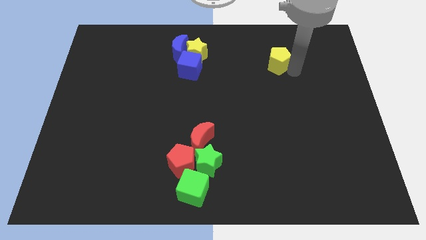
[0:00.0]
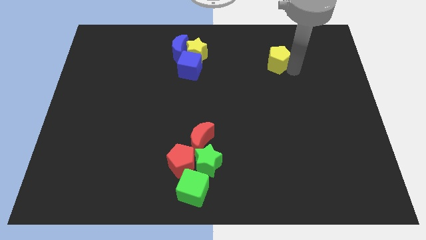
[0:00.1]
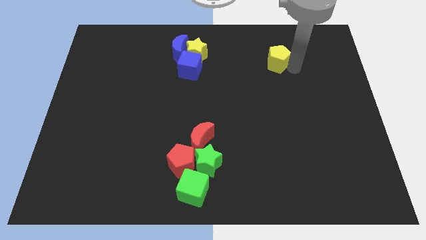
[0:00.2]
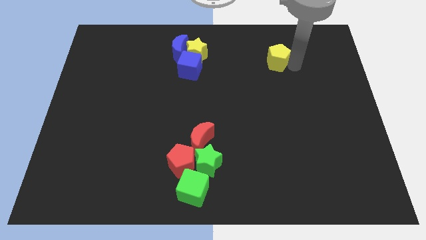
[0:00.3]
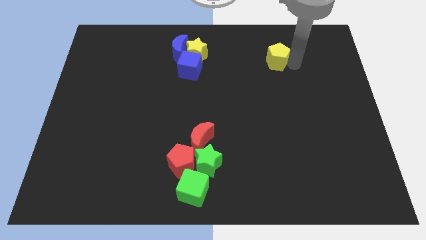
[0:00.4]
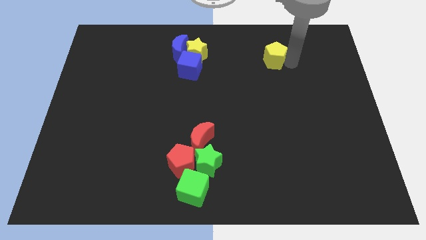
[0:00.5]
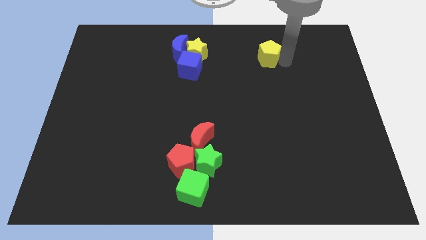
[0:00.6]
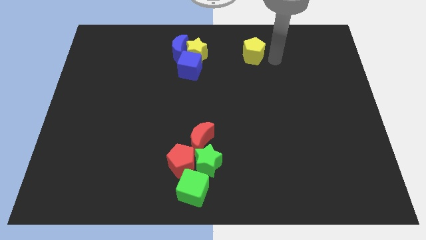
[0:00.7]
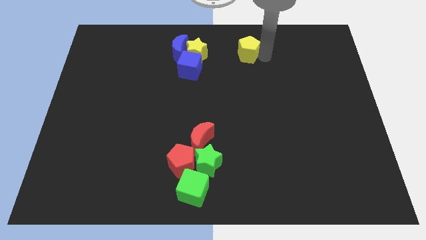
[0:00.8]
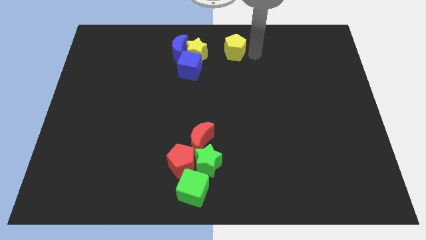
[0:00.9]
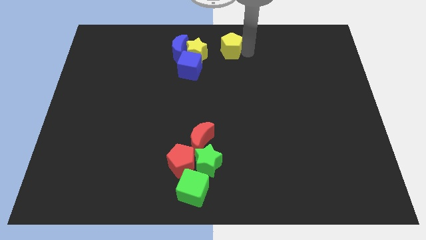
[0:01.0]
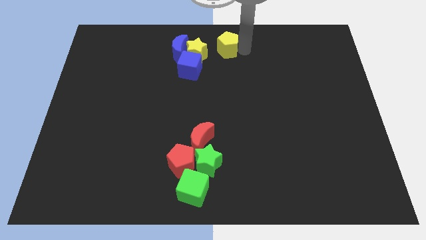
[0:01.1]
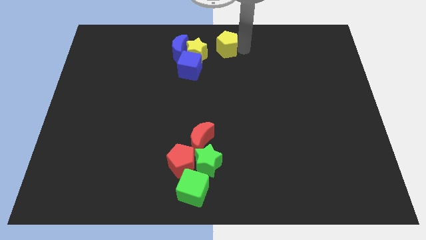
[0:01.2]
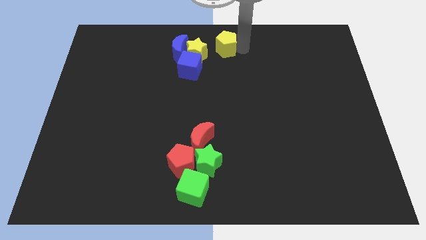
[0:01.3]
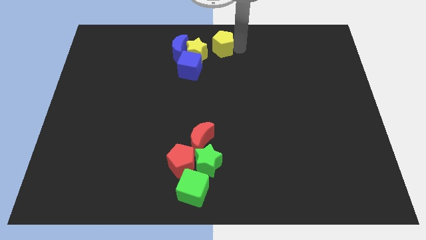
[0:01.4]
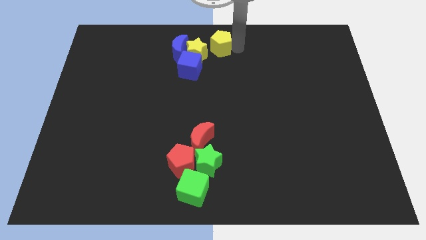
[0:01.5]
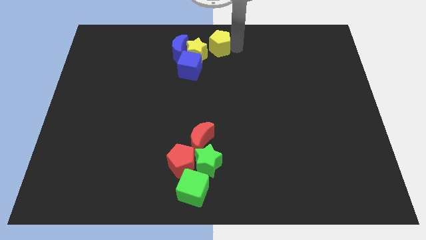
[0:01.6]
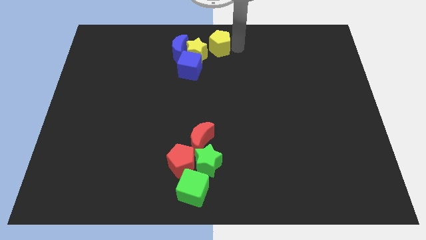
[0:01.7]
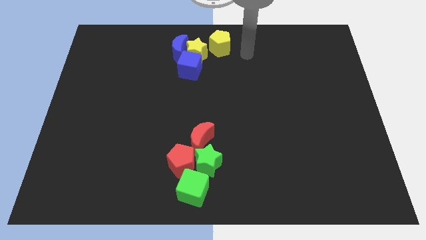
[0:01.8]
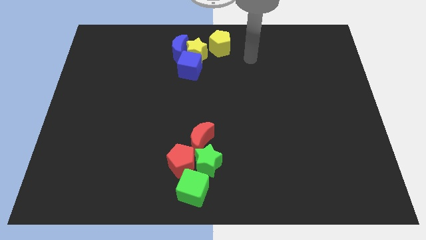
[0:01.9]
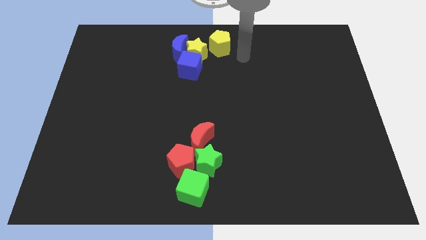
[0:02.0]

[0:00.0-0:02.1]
push the yellow pentagon to the right of the yellow star

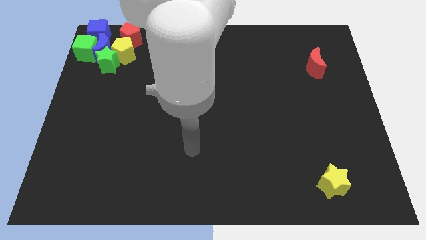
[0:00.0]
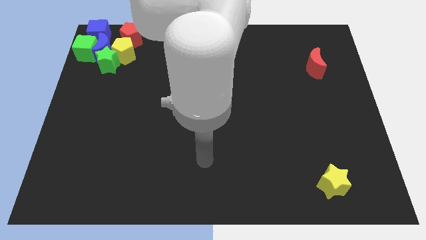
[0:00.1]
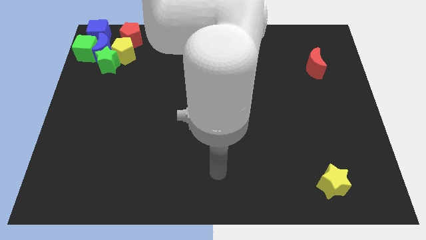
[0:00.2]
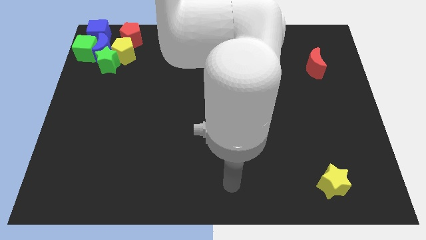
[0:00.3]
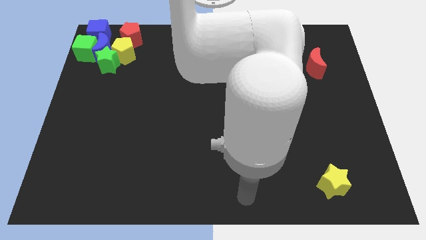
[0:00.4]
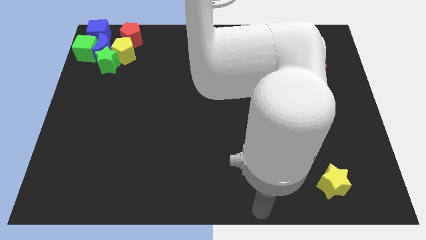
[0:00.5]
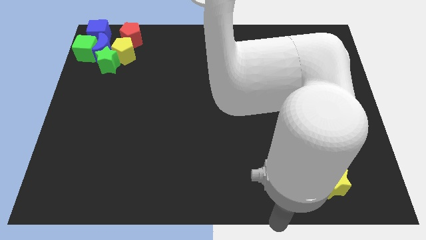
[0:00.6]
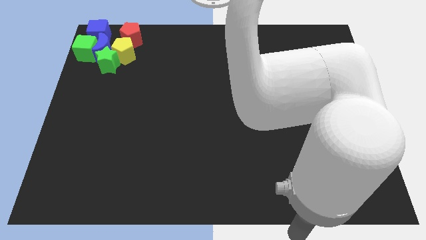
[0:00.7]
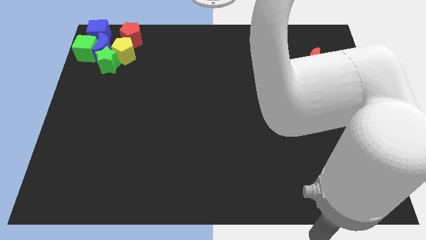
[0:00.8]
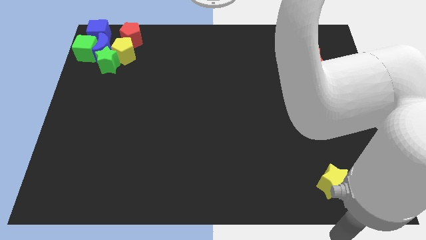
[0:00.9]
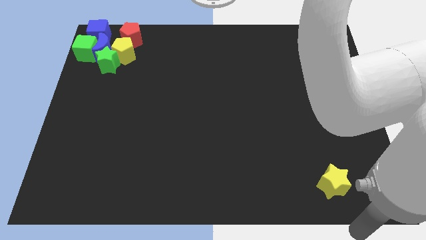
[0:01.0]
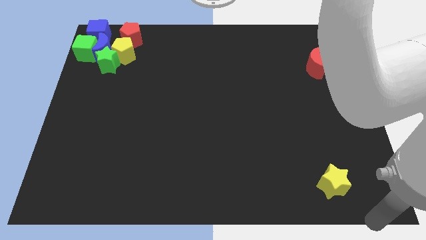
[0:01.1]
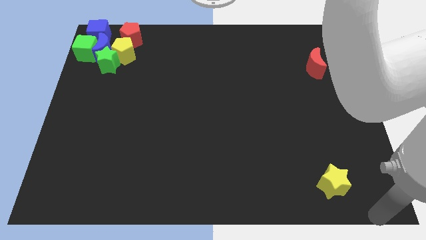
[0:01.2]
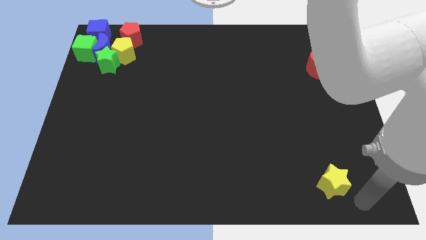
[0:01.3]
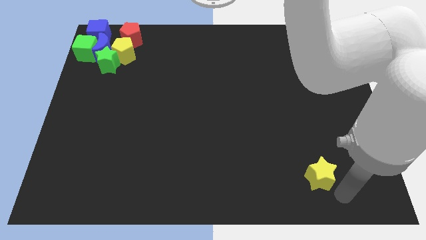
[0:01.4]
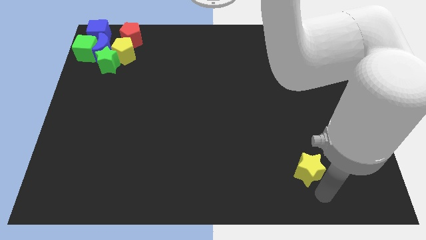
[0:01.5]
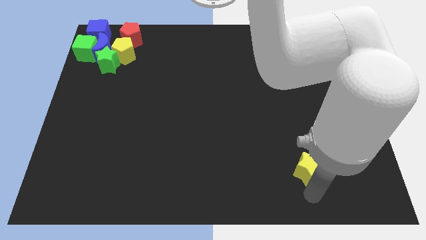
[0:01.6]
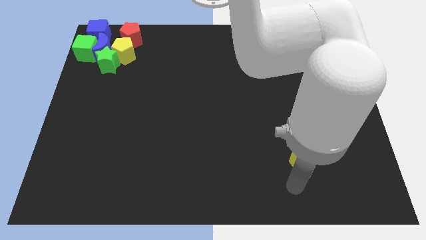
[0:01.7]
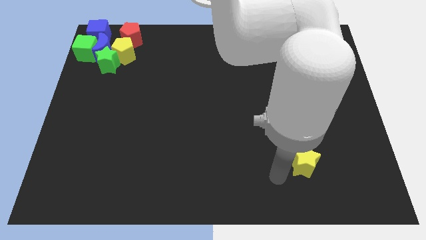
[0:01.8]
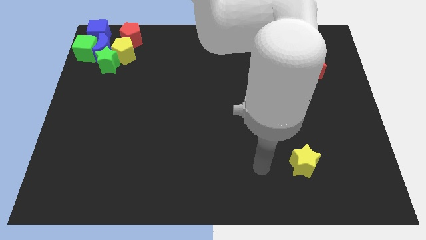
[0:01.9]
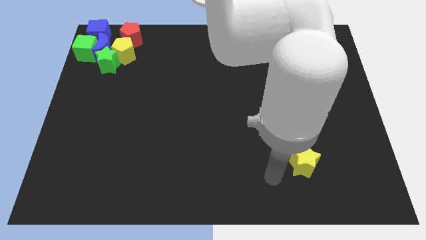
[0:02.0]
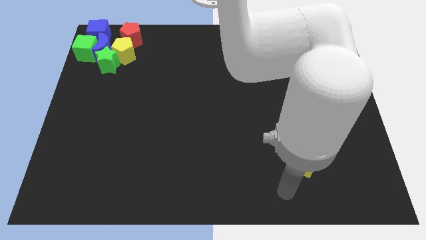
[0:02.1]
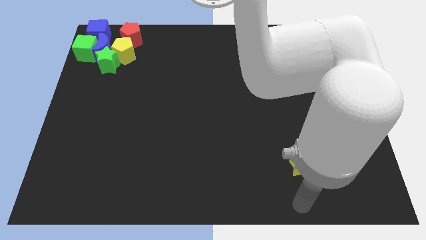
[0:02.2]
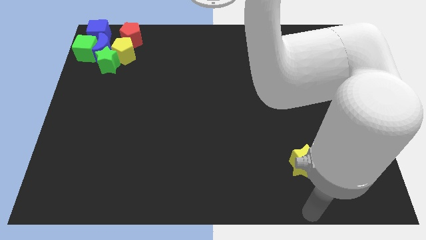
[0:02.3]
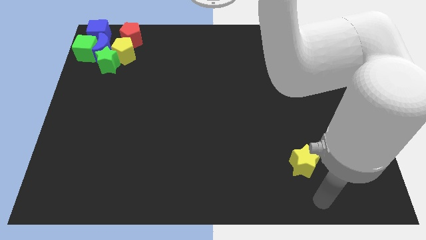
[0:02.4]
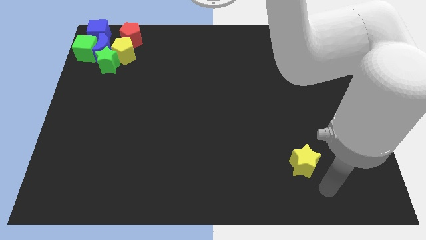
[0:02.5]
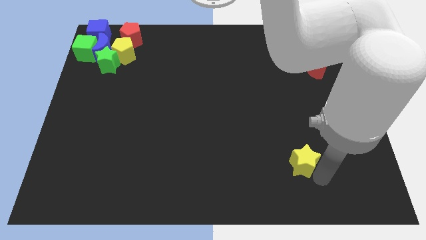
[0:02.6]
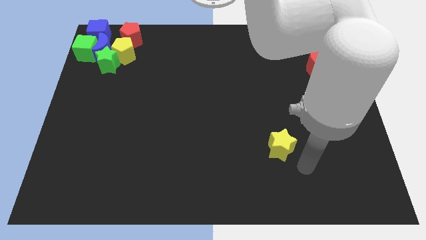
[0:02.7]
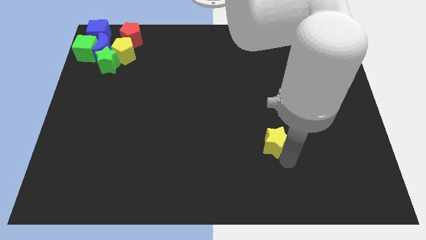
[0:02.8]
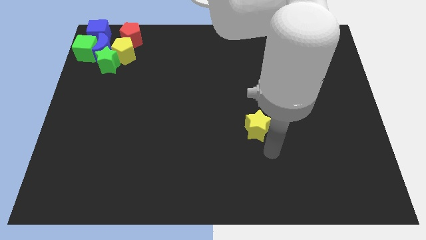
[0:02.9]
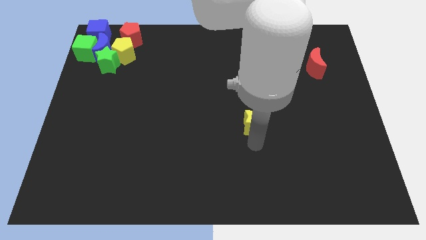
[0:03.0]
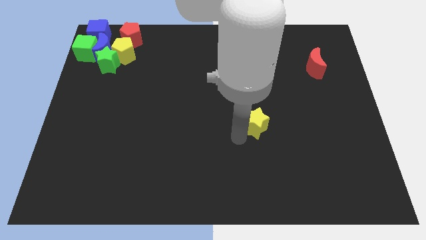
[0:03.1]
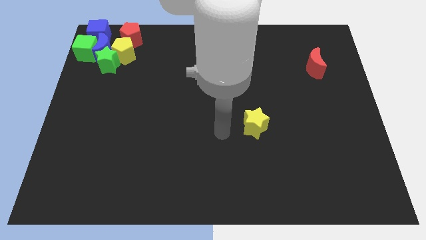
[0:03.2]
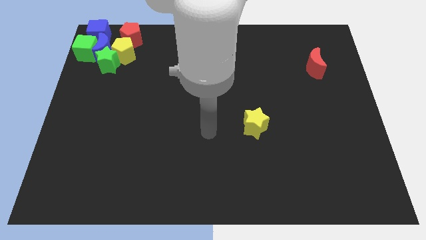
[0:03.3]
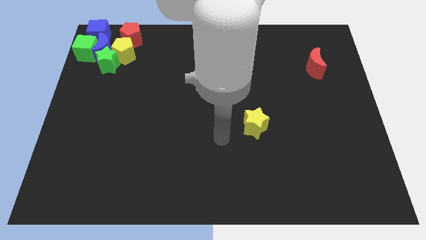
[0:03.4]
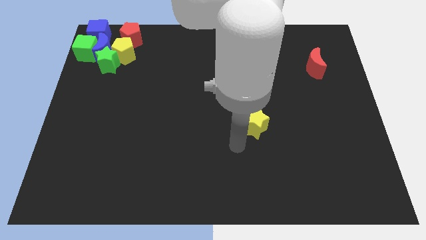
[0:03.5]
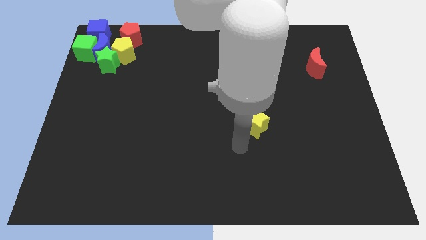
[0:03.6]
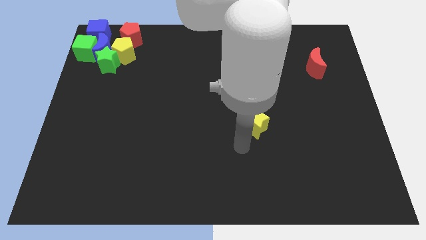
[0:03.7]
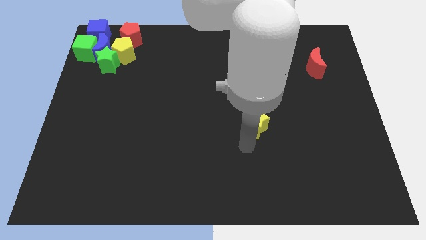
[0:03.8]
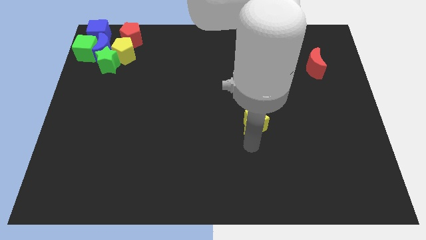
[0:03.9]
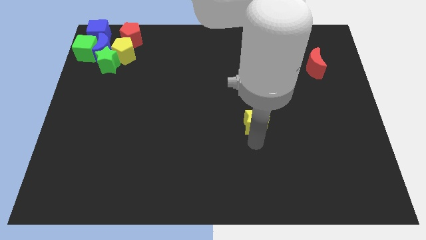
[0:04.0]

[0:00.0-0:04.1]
push yellow star towards center

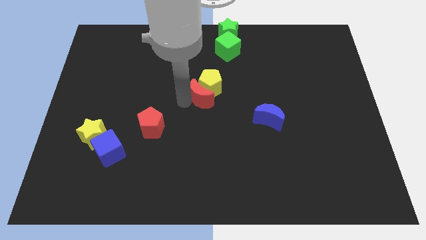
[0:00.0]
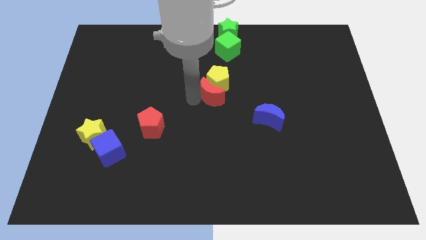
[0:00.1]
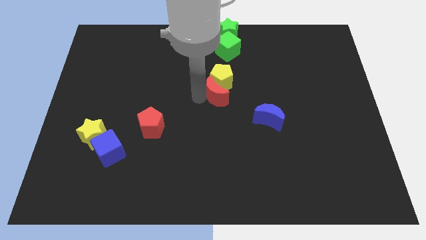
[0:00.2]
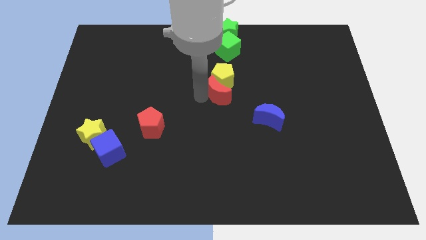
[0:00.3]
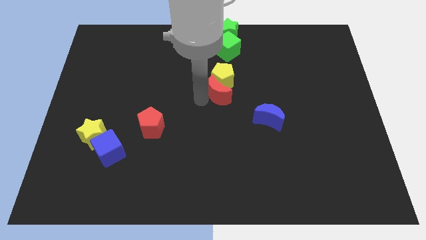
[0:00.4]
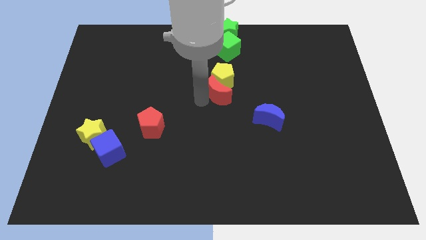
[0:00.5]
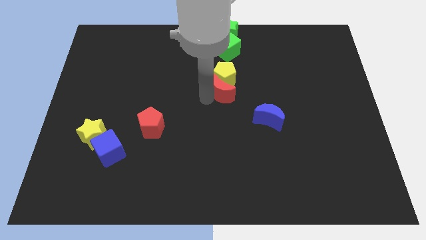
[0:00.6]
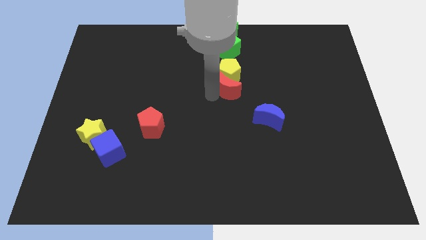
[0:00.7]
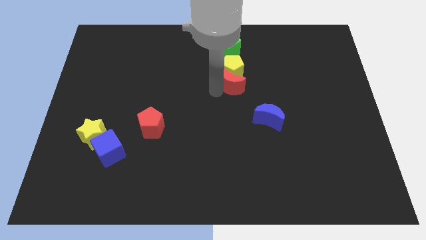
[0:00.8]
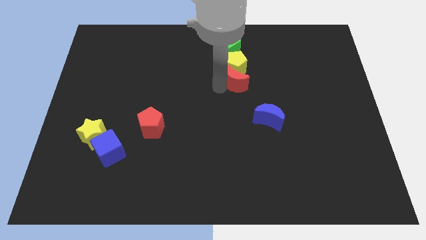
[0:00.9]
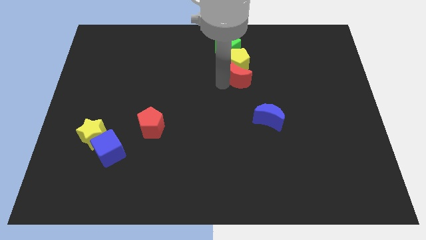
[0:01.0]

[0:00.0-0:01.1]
push red crescent in to yellow pentagon

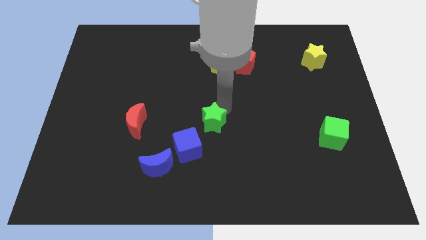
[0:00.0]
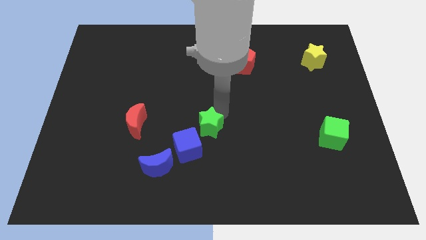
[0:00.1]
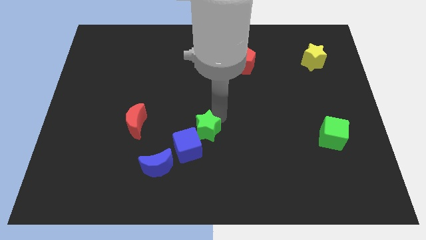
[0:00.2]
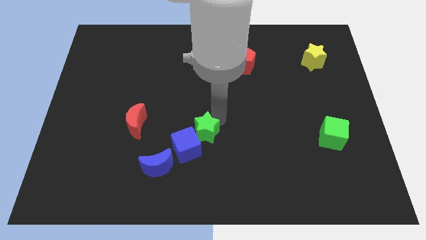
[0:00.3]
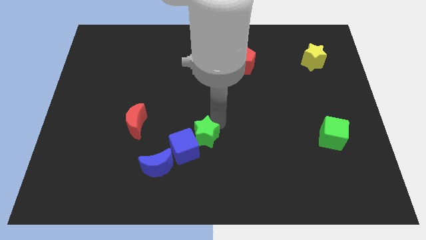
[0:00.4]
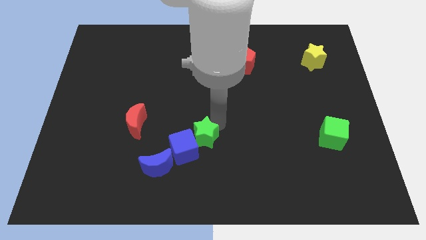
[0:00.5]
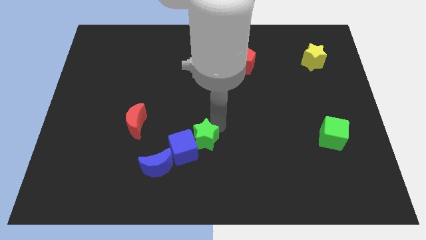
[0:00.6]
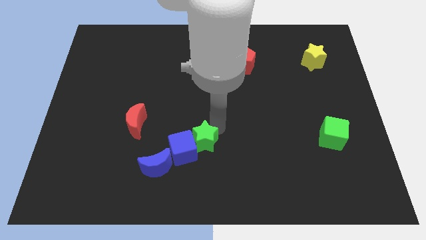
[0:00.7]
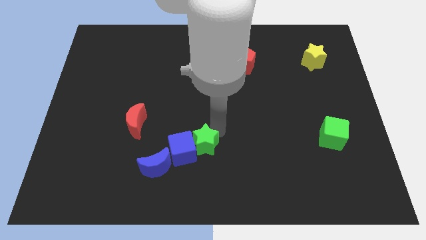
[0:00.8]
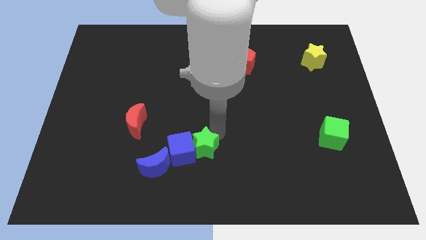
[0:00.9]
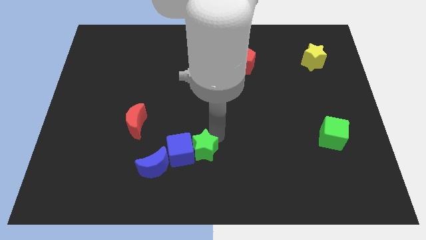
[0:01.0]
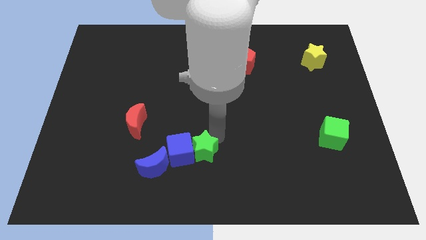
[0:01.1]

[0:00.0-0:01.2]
push the green star into the blue cube

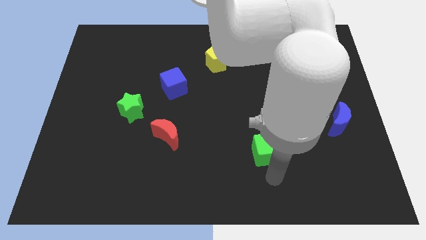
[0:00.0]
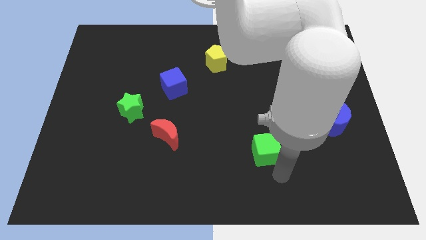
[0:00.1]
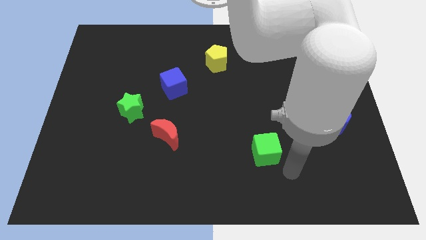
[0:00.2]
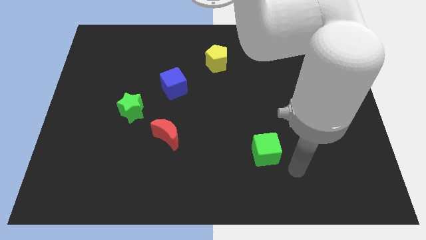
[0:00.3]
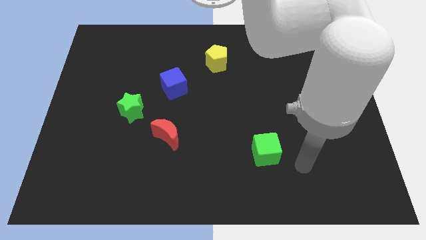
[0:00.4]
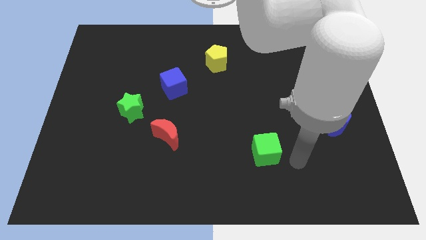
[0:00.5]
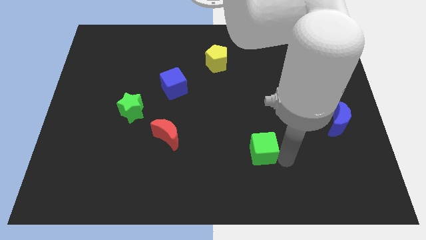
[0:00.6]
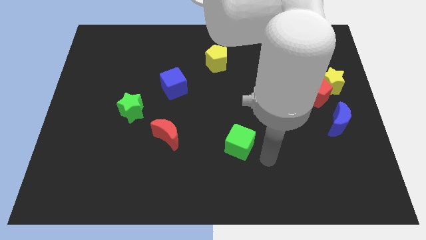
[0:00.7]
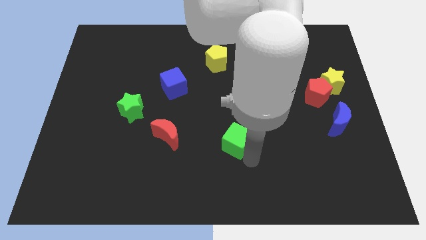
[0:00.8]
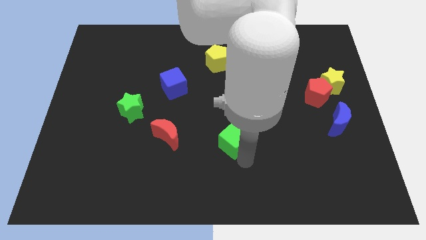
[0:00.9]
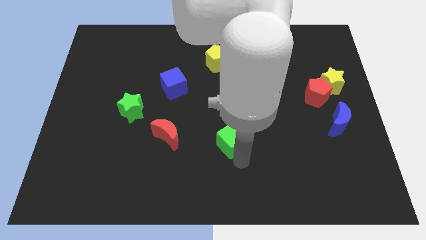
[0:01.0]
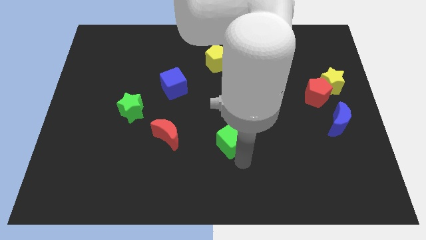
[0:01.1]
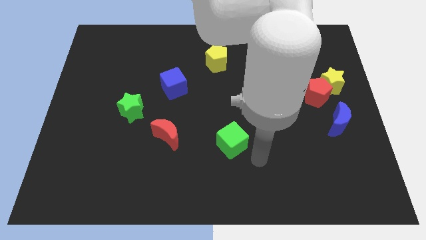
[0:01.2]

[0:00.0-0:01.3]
place the green cube below the yellow pentagon
